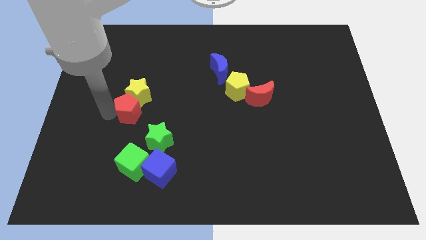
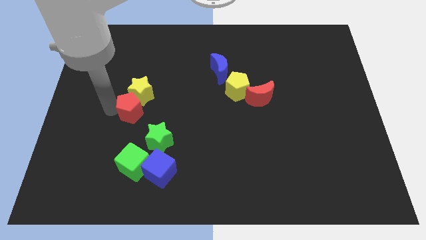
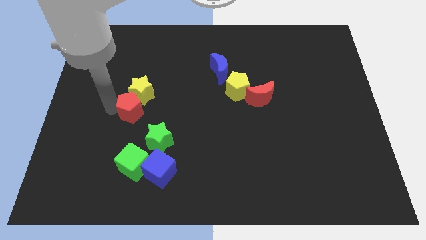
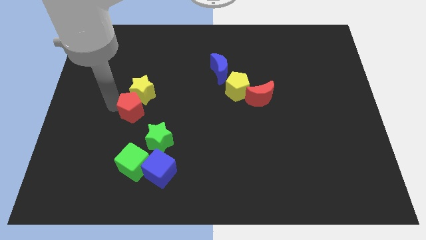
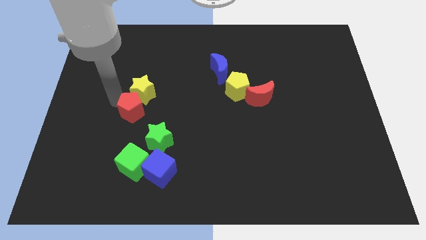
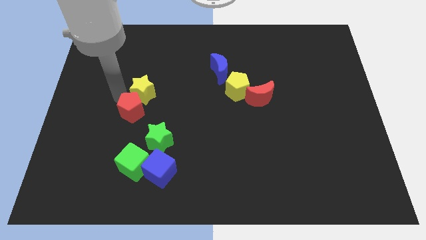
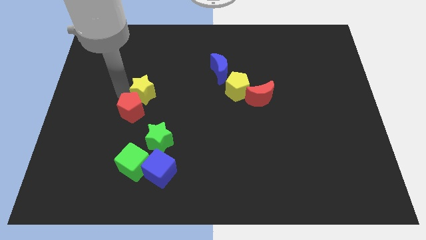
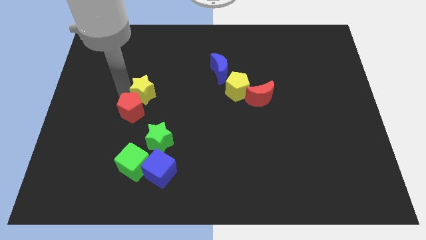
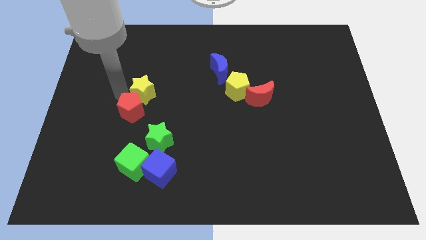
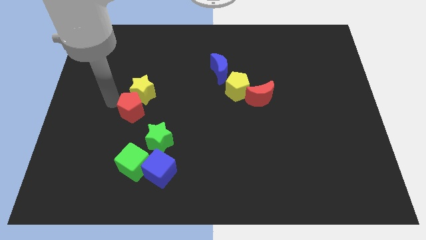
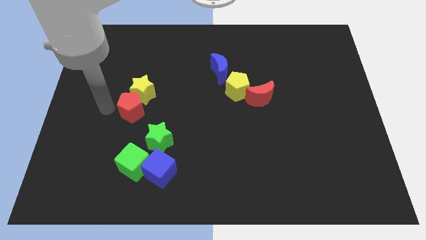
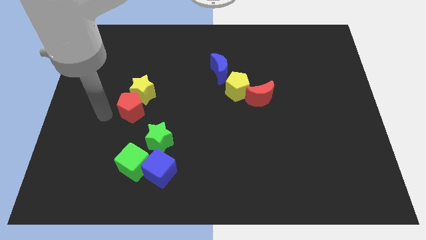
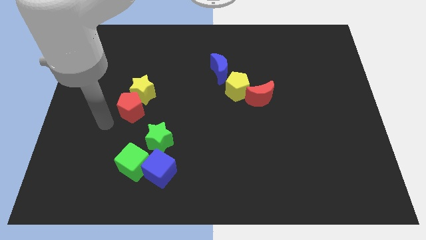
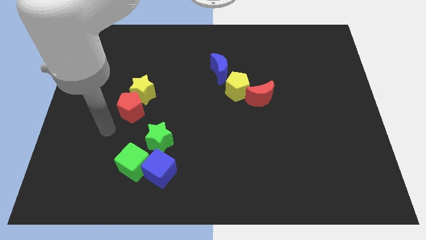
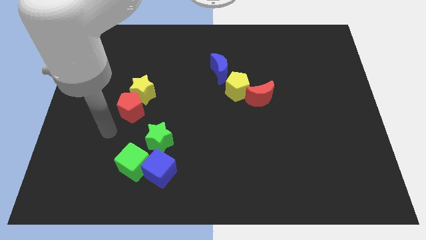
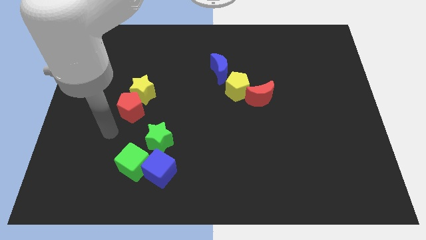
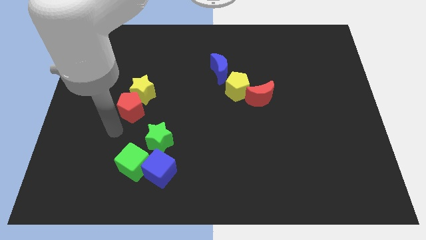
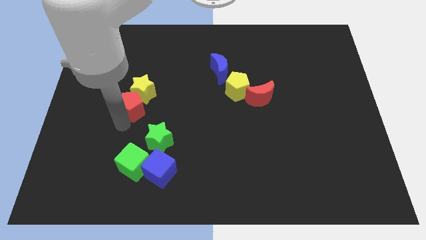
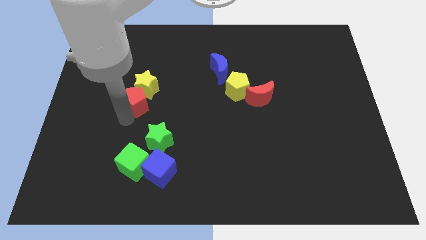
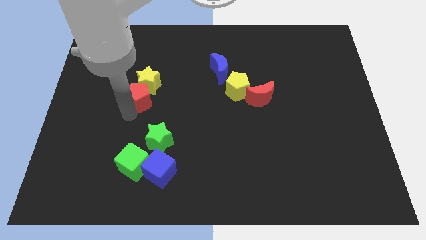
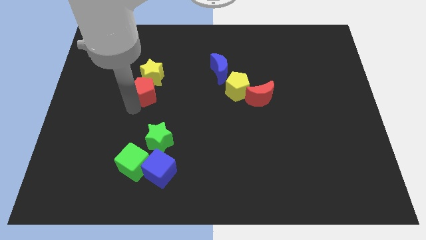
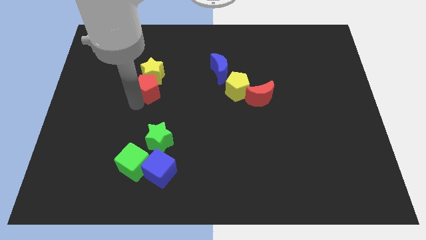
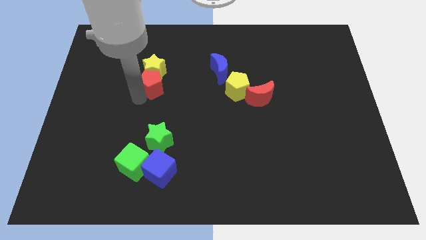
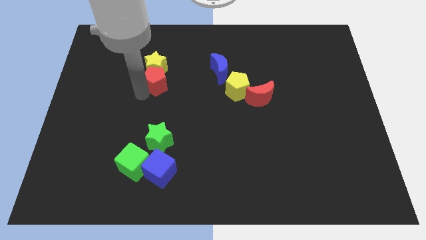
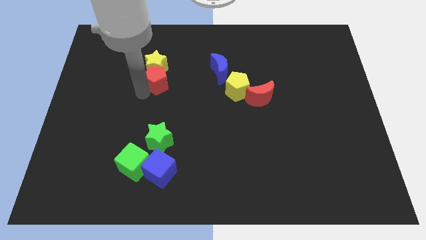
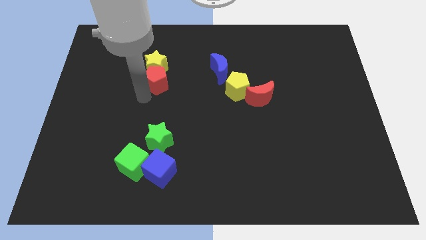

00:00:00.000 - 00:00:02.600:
push red pentagon above green star

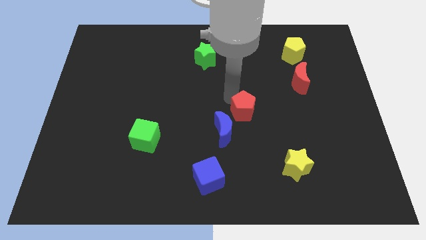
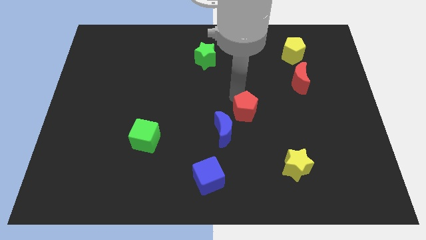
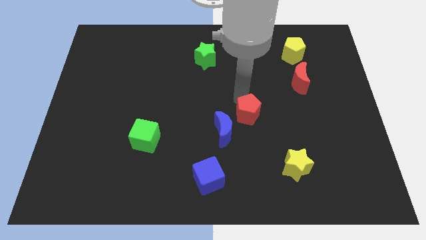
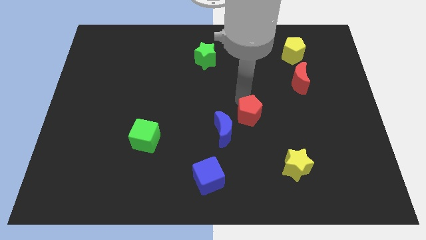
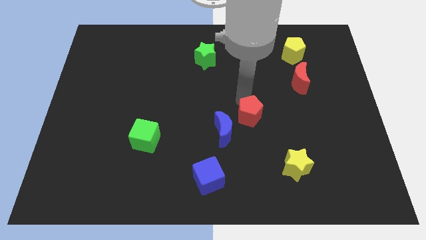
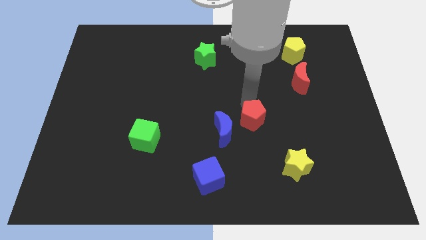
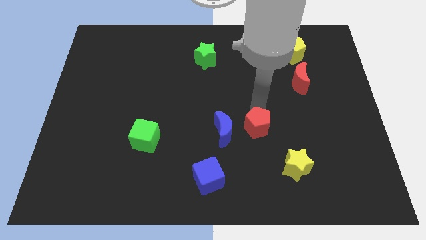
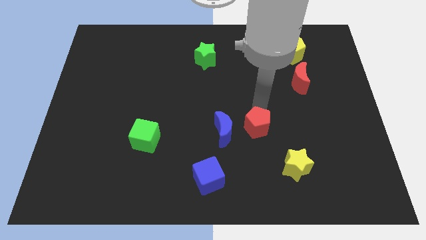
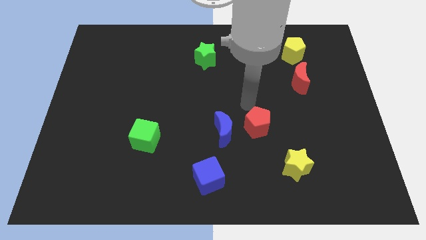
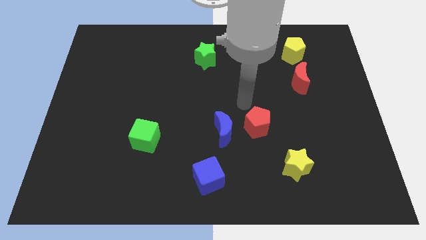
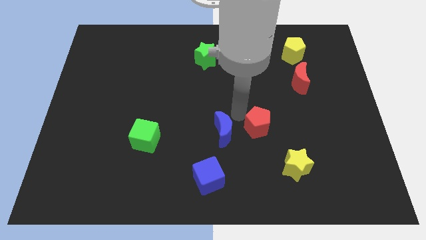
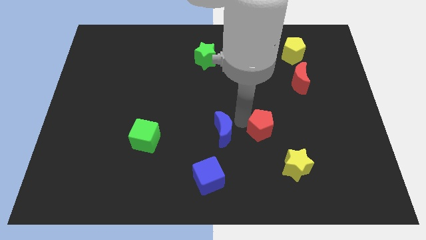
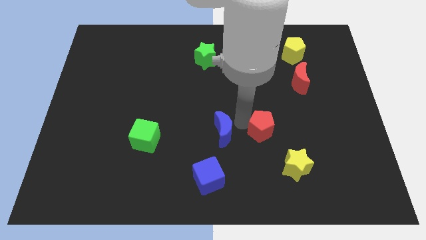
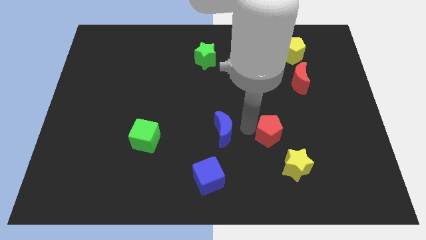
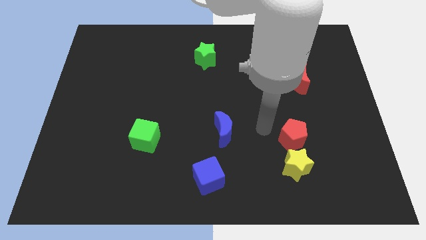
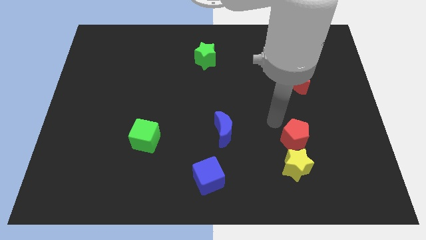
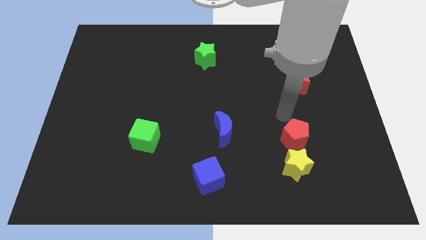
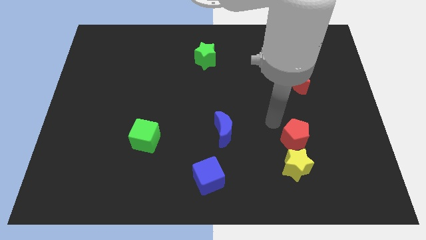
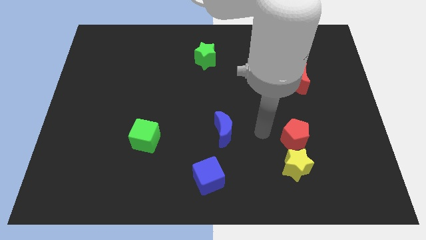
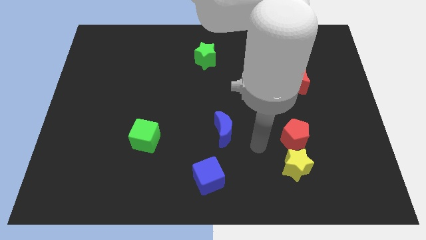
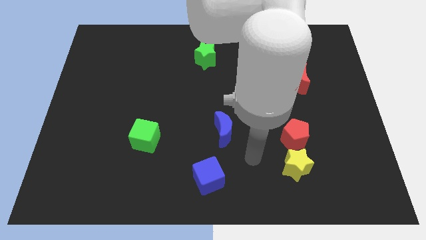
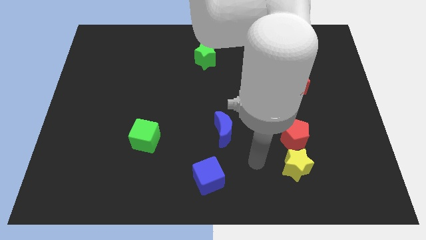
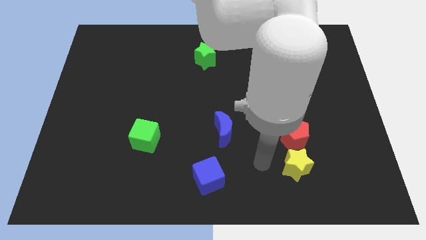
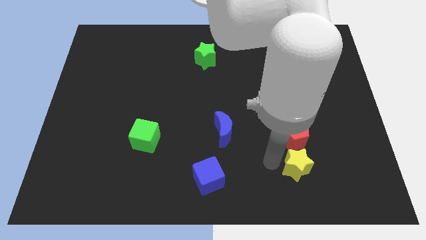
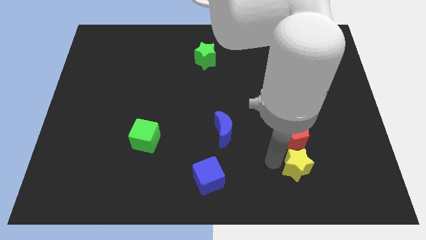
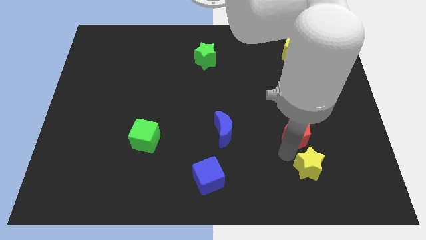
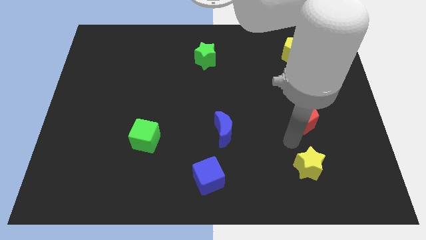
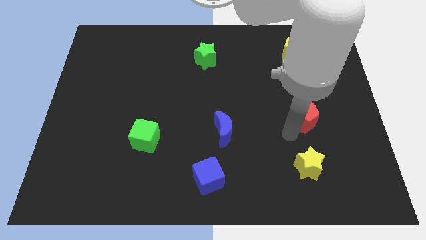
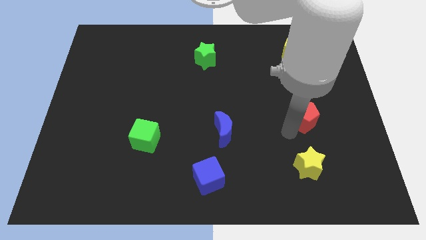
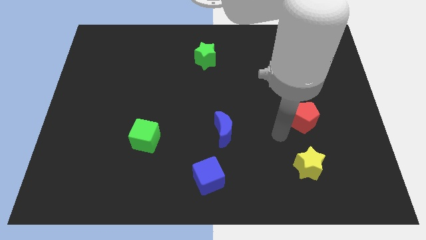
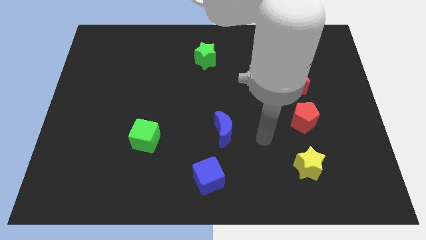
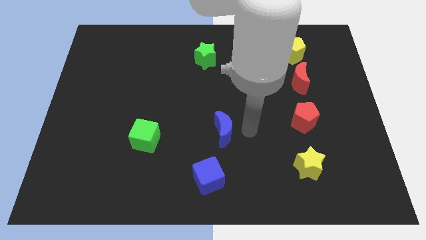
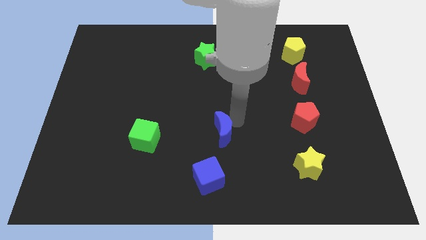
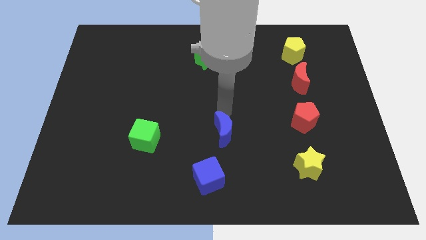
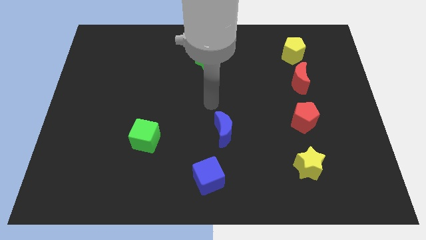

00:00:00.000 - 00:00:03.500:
place the red pentagon and yellow star under the red moon

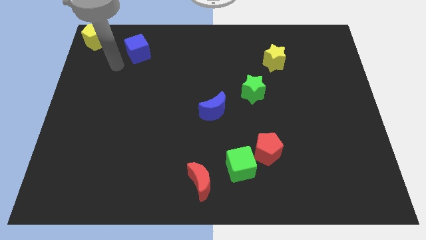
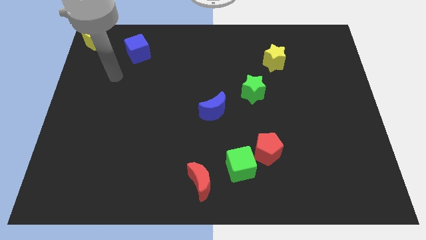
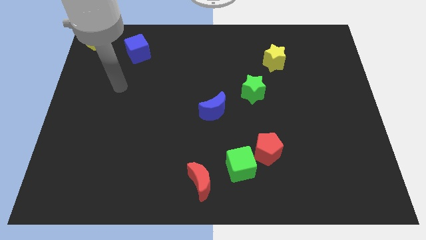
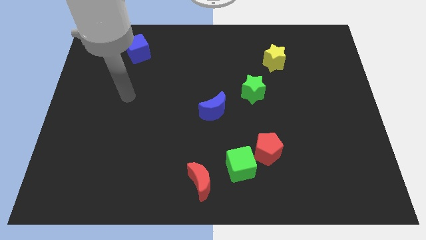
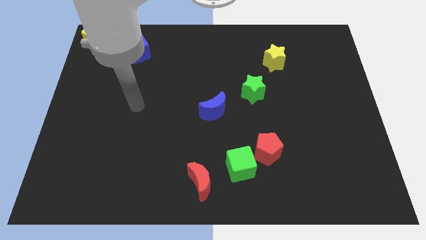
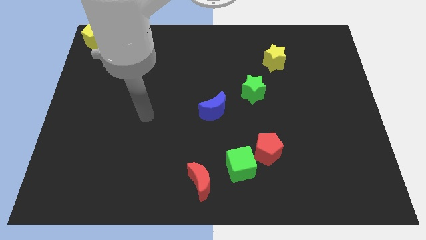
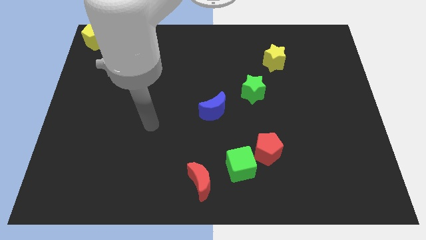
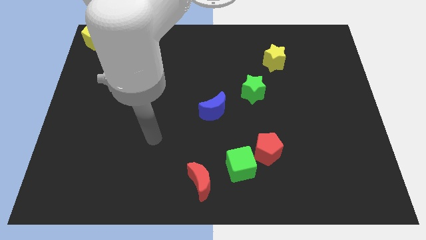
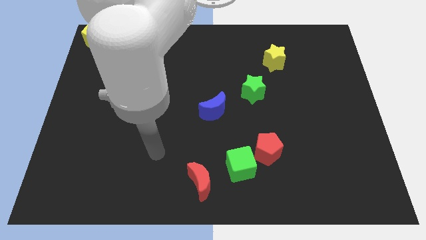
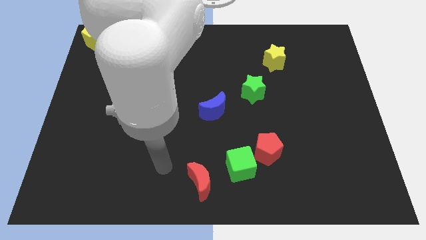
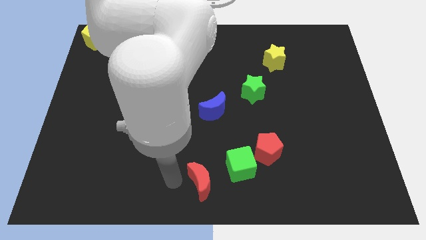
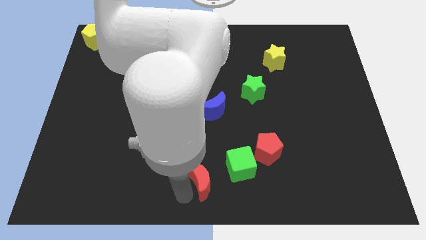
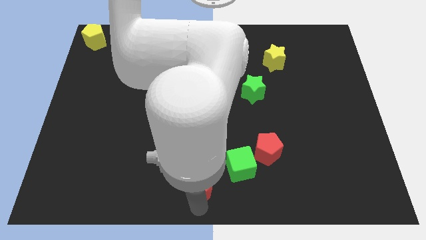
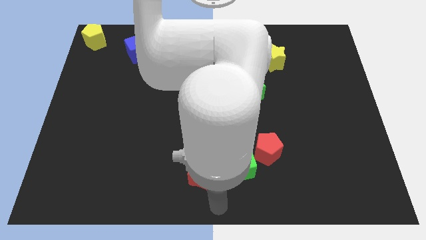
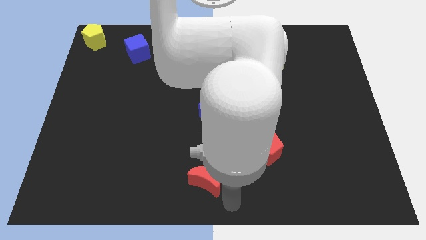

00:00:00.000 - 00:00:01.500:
move your hand from top to bottom center side

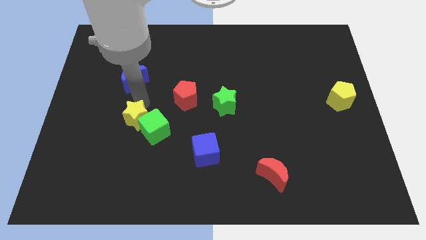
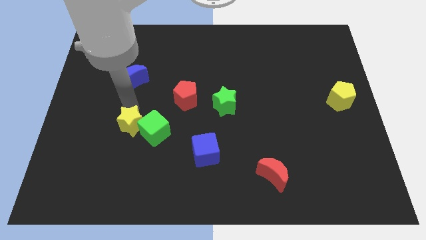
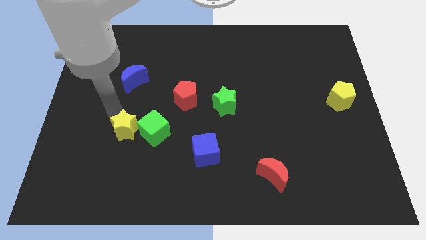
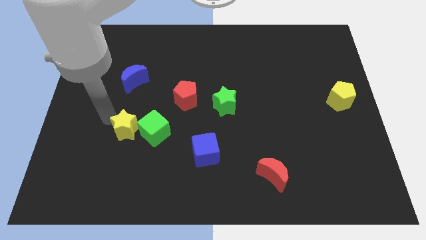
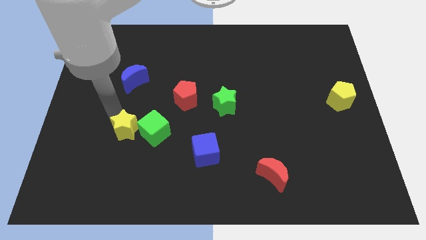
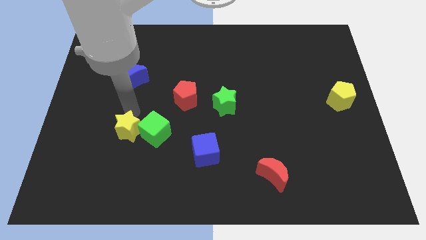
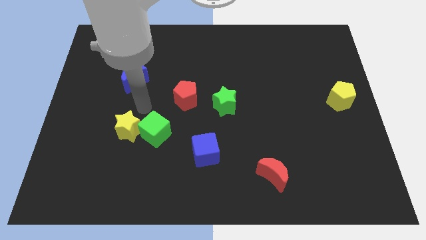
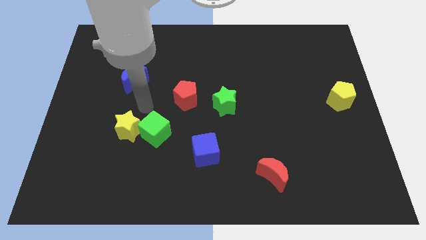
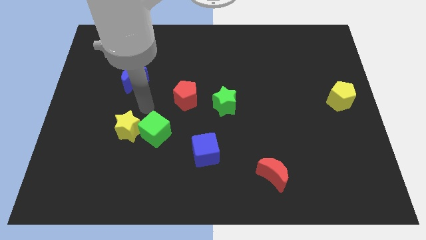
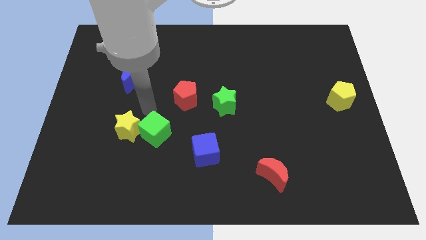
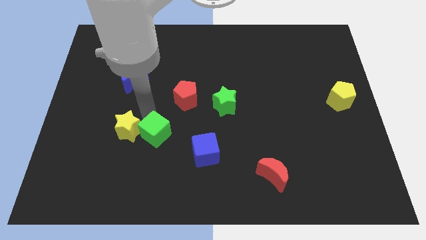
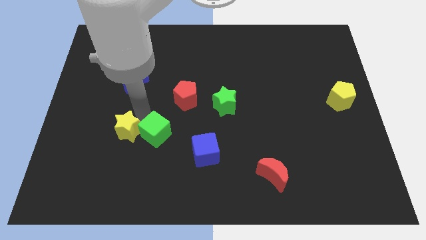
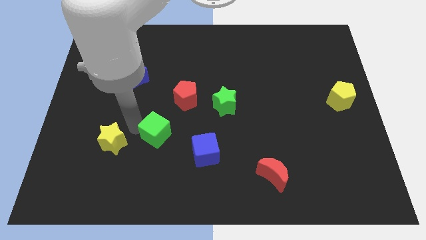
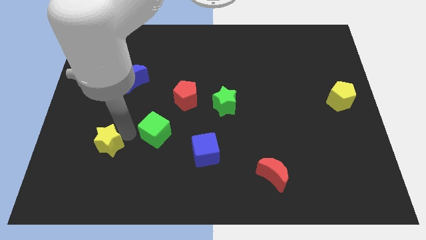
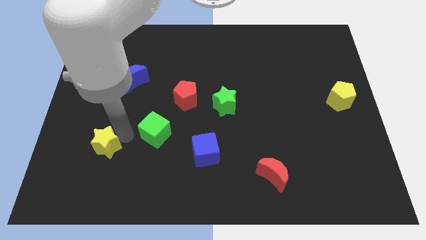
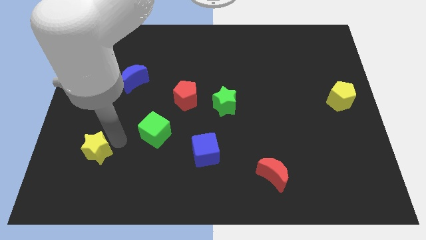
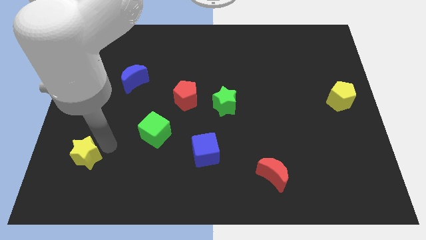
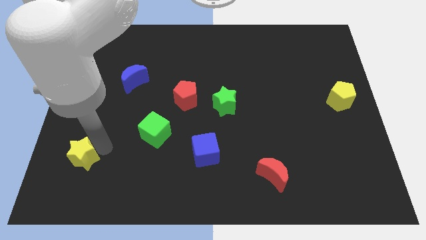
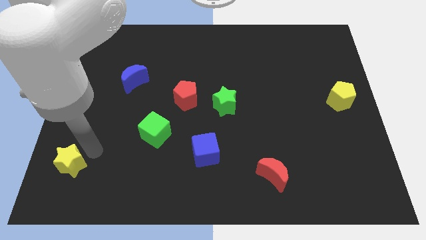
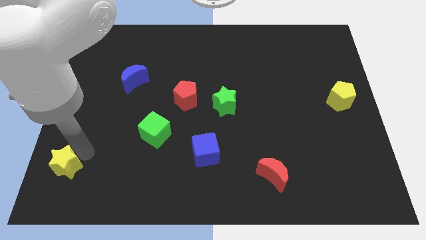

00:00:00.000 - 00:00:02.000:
separate the yellow star towards bottom left side
